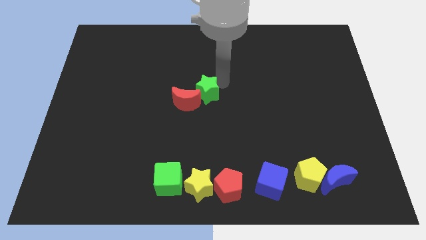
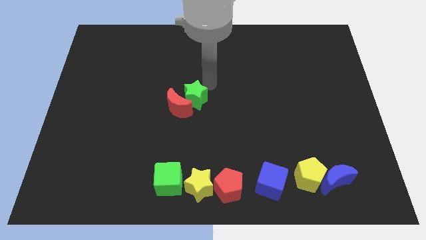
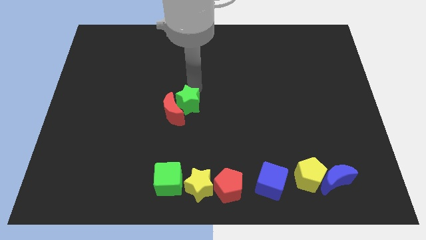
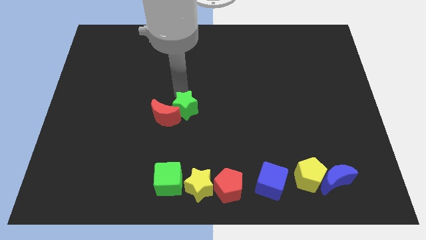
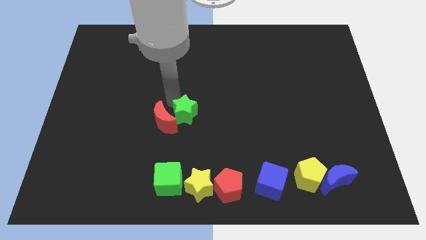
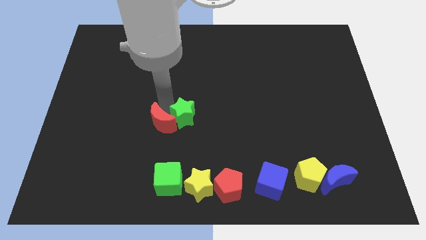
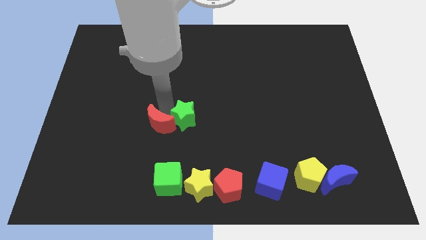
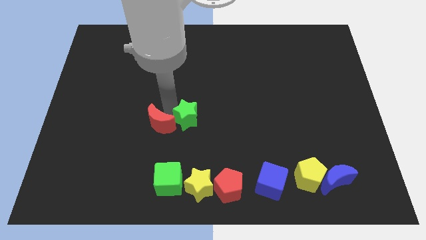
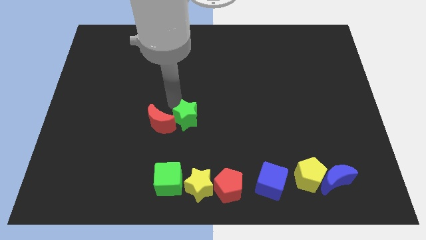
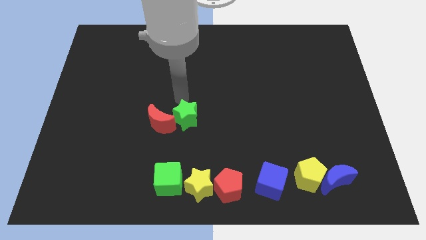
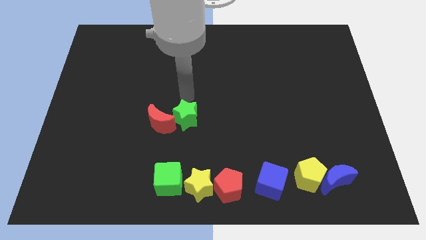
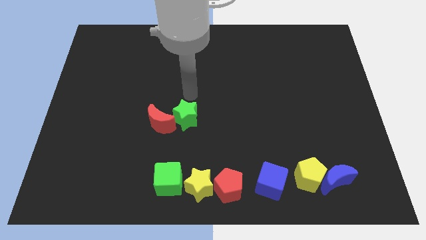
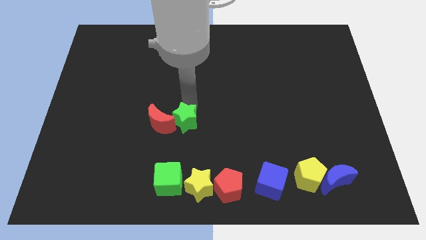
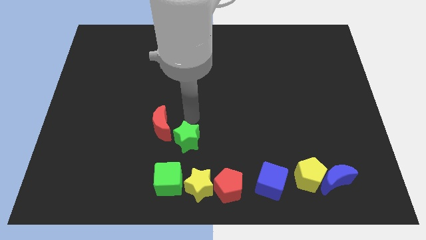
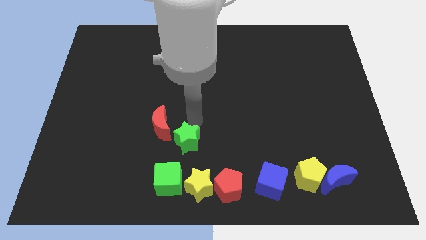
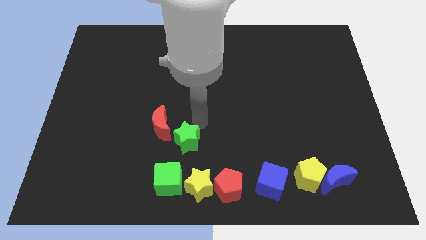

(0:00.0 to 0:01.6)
push the green star towards bottom center

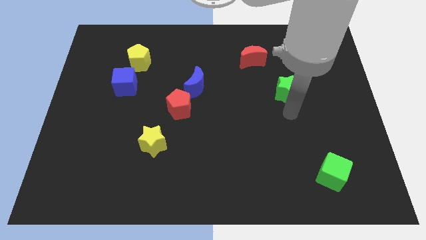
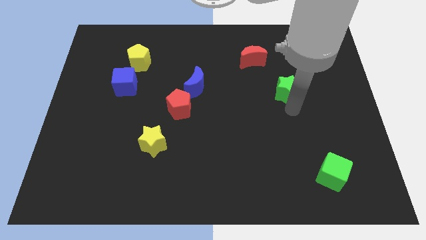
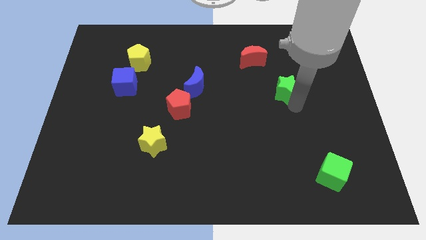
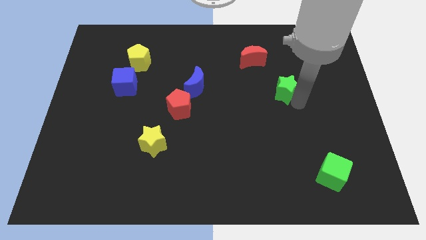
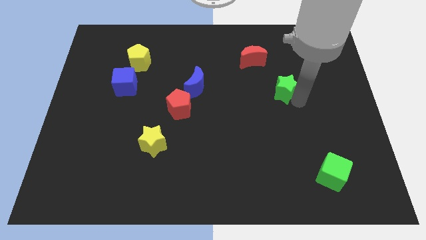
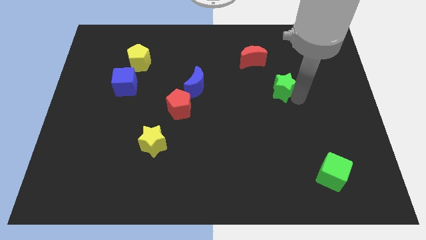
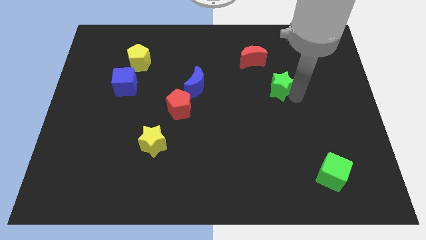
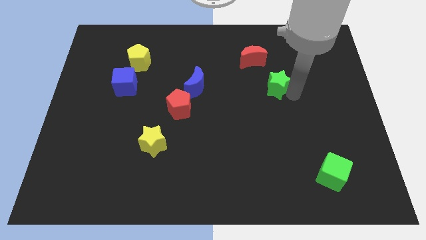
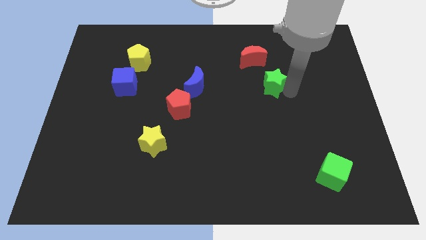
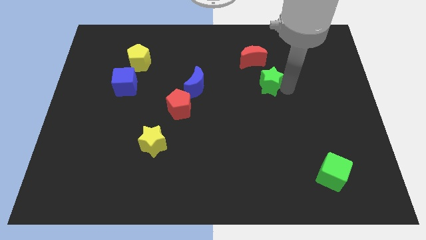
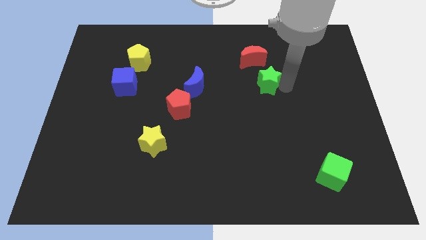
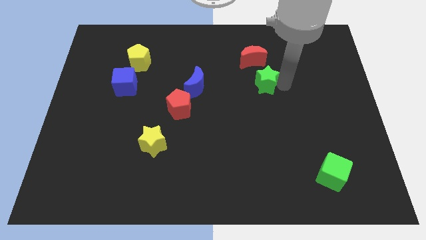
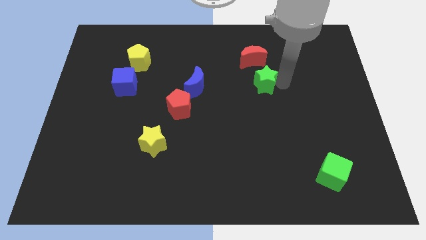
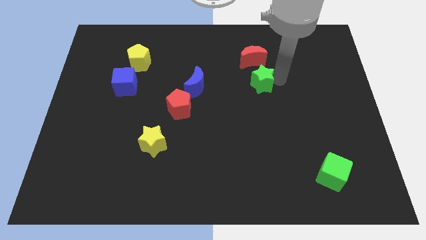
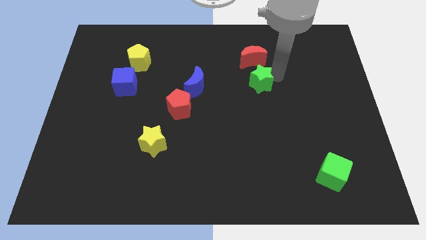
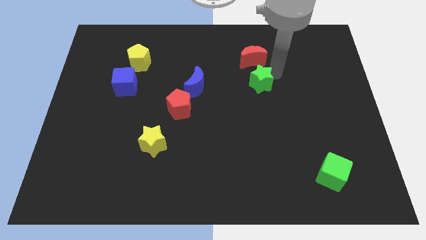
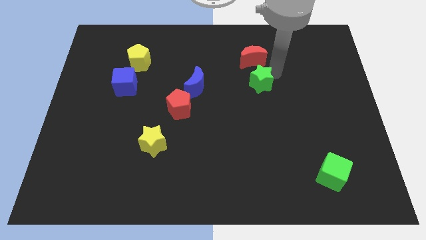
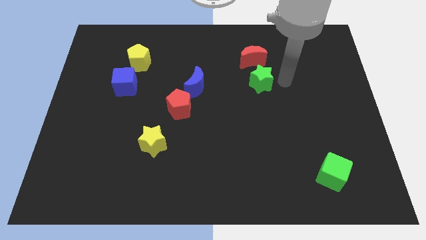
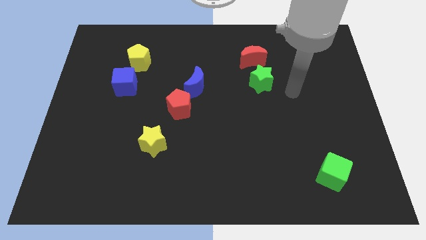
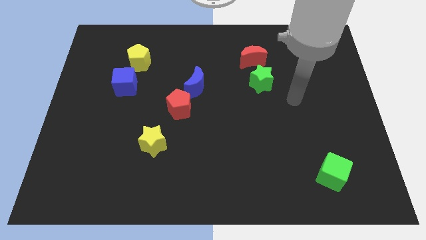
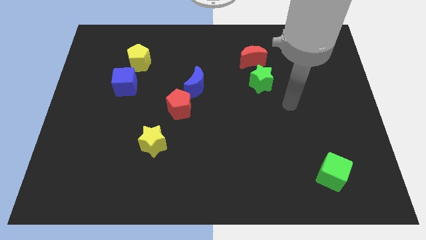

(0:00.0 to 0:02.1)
push green star towards red moon

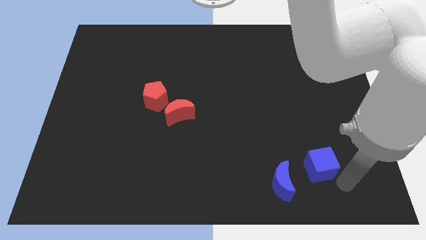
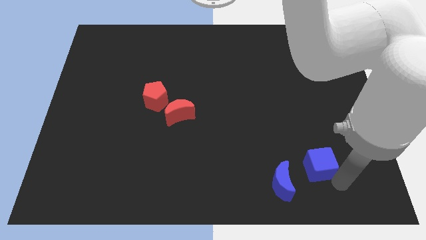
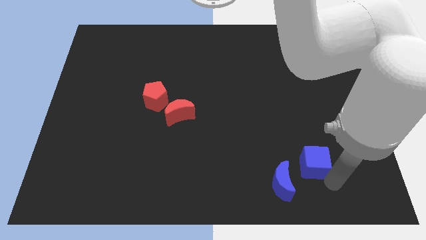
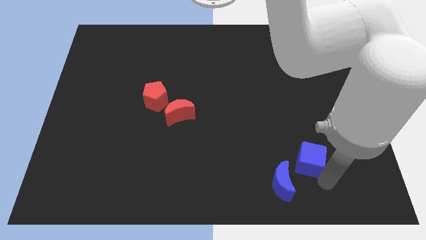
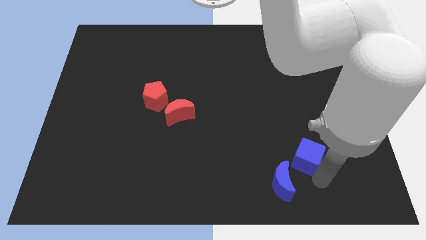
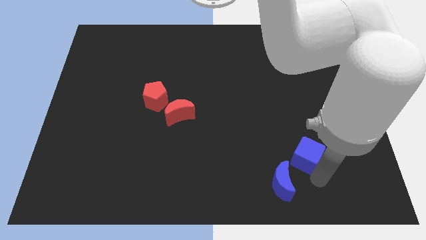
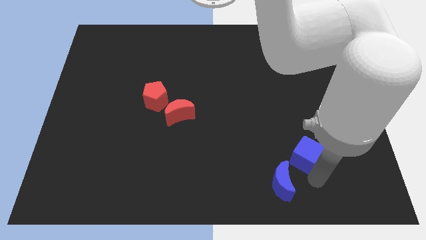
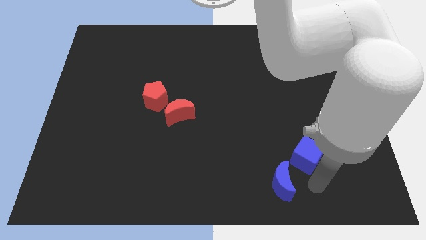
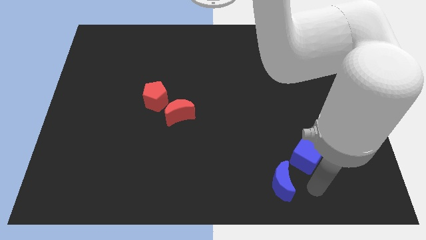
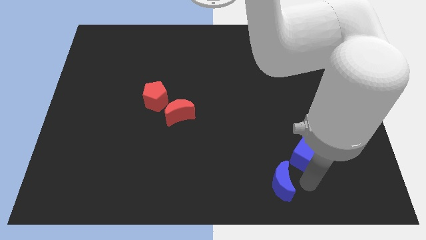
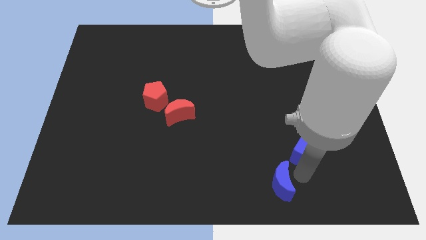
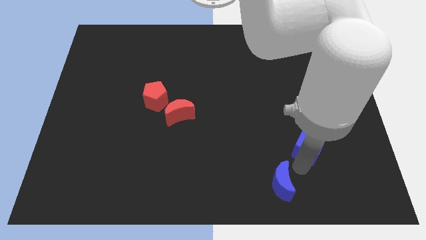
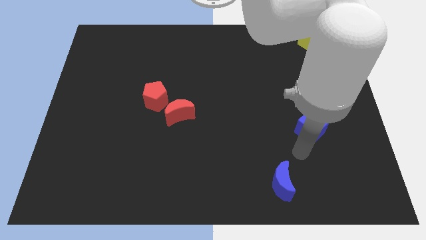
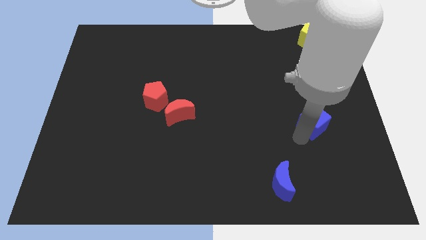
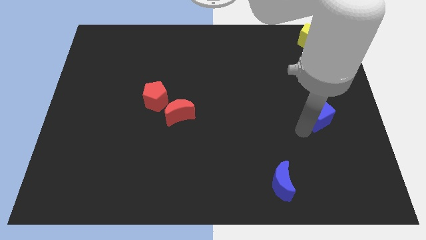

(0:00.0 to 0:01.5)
move the blue cube to the top of the board

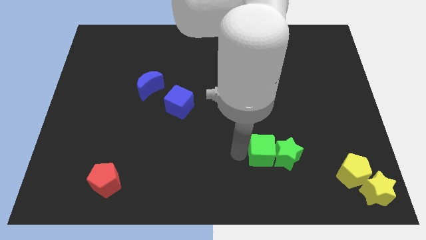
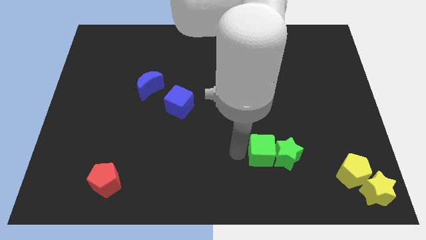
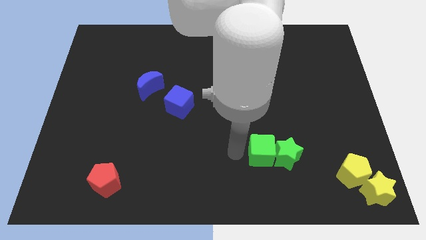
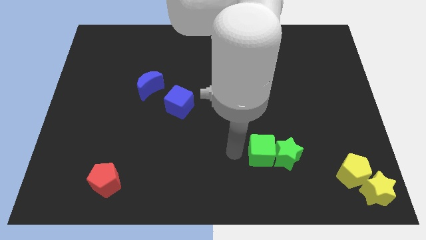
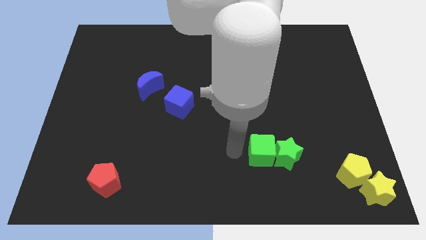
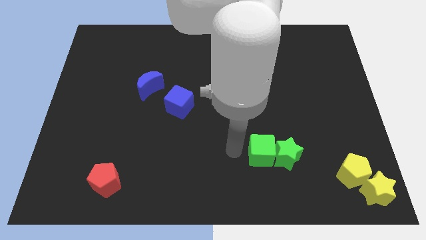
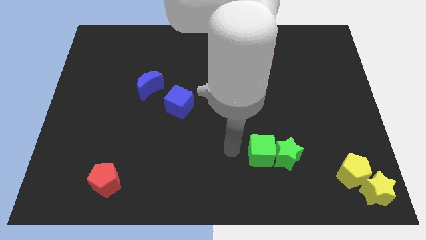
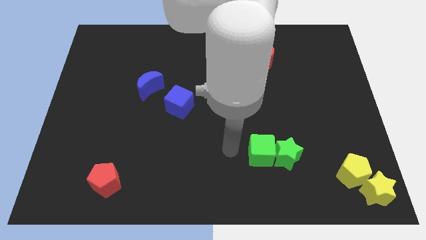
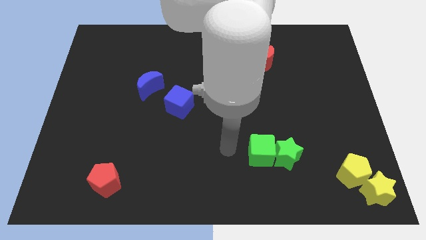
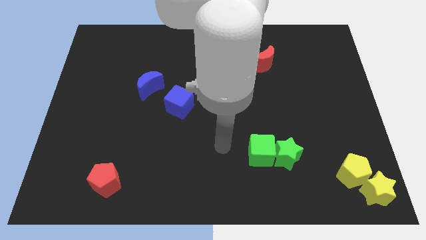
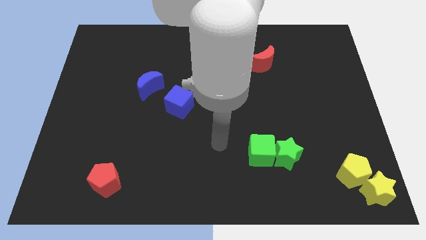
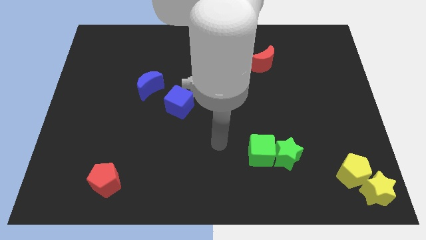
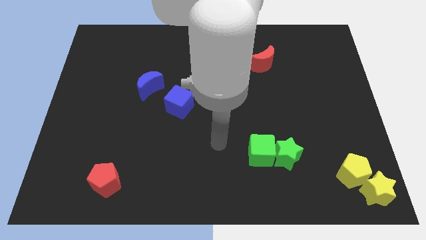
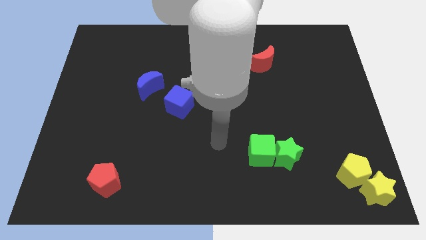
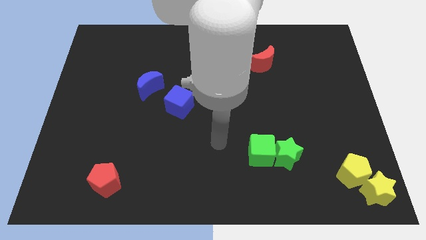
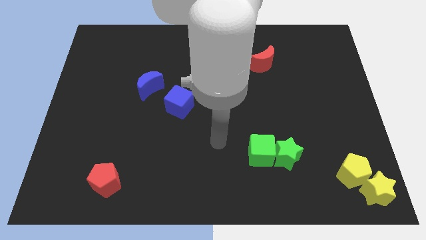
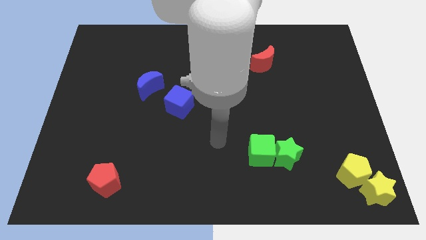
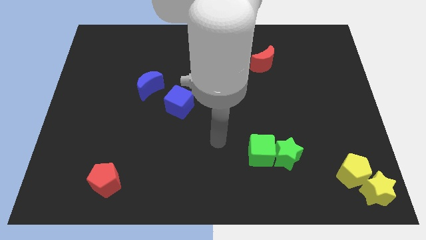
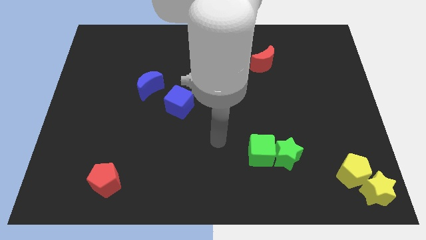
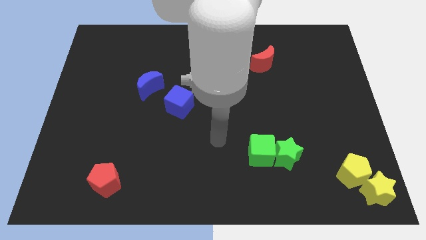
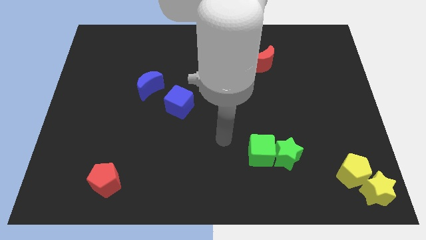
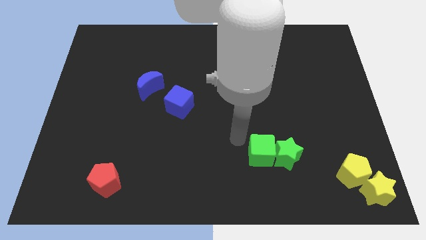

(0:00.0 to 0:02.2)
move your arm from green cube

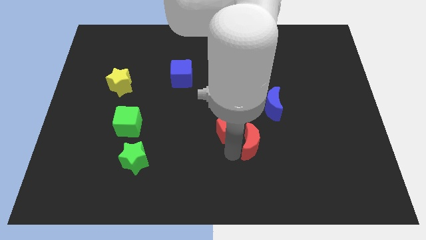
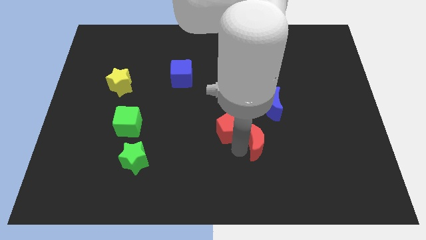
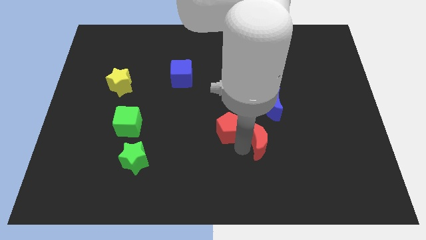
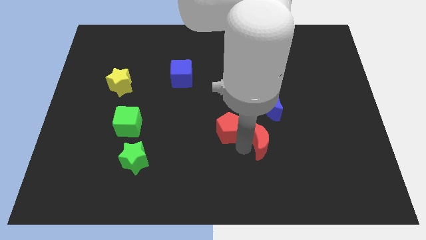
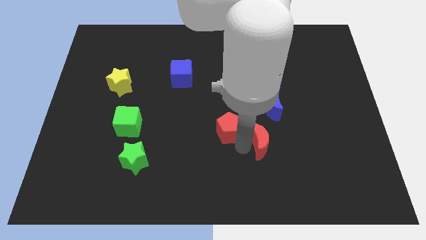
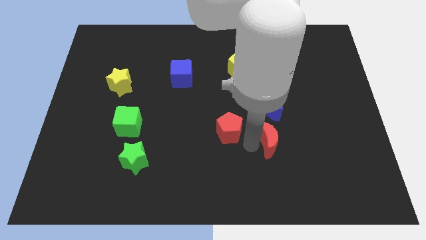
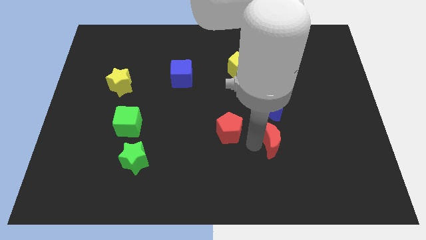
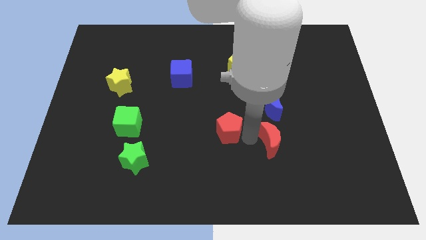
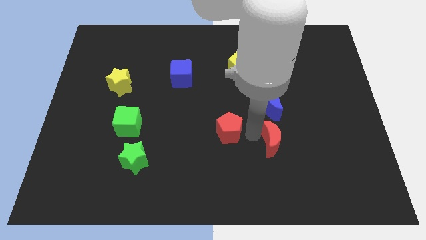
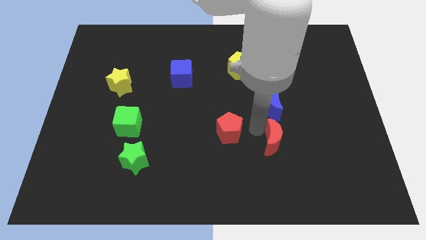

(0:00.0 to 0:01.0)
move the red moon to the below of the blue moon

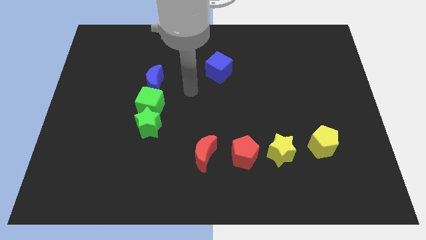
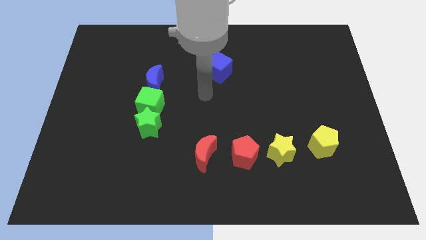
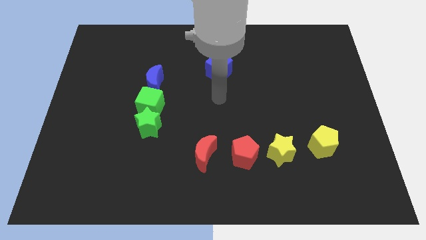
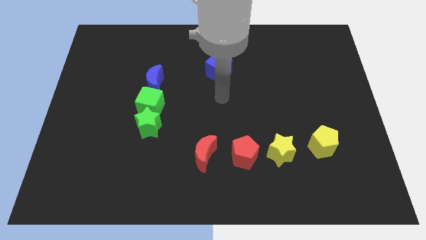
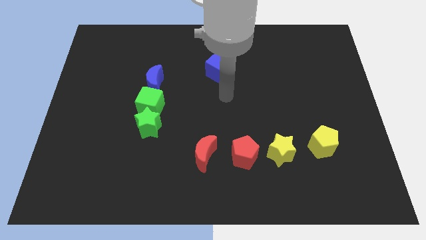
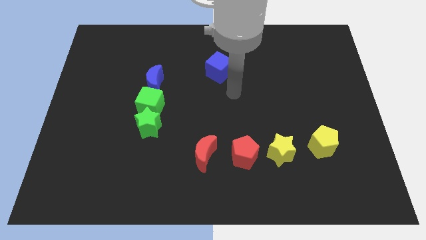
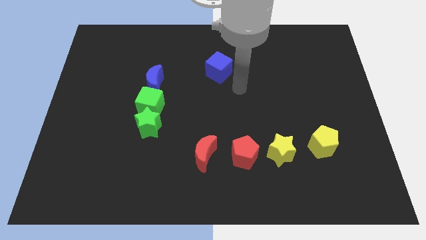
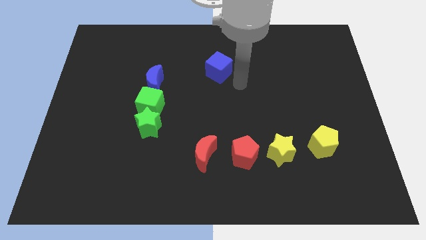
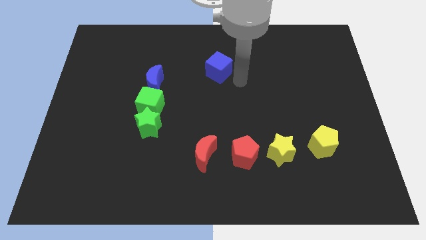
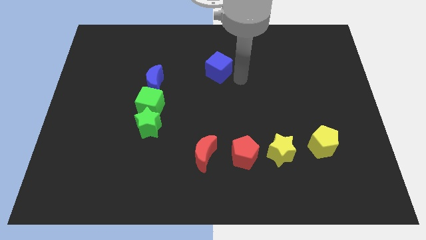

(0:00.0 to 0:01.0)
move your arm to the right of blue cube
